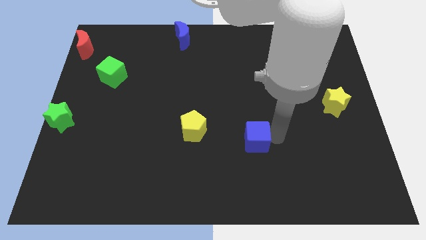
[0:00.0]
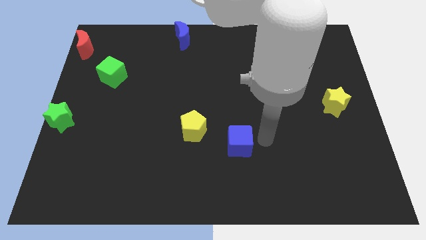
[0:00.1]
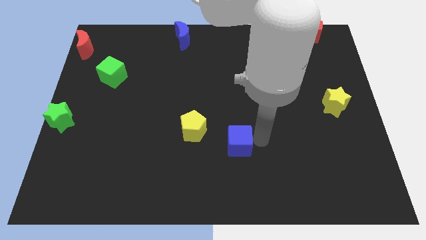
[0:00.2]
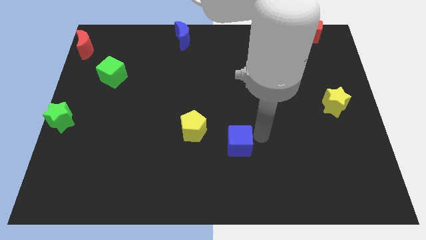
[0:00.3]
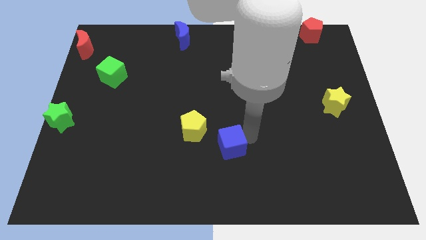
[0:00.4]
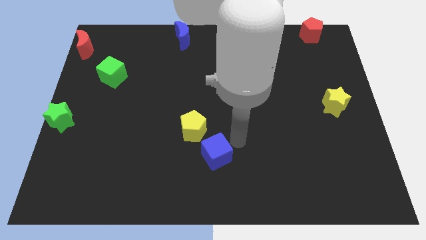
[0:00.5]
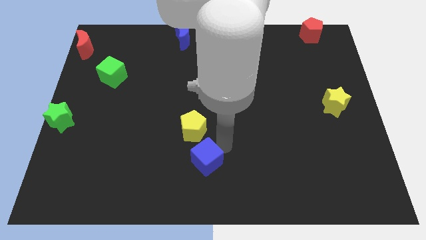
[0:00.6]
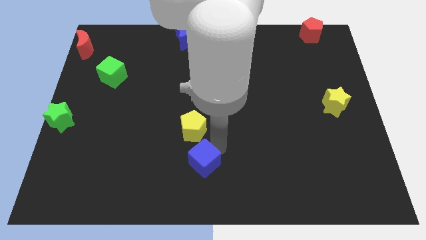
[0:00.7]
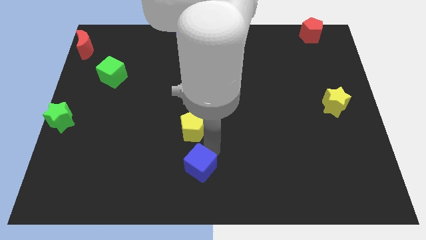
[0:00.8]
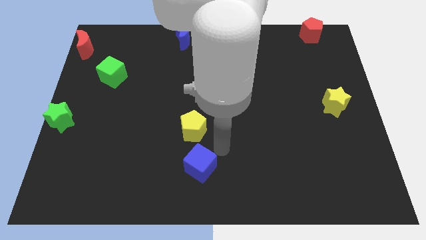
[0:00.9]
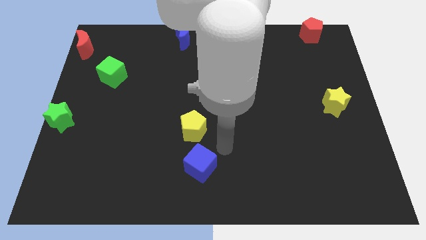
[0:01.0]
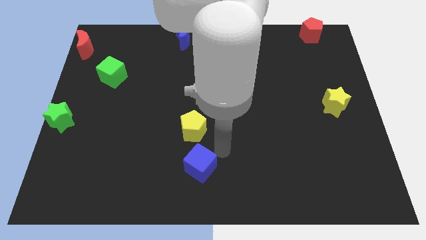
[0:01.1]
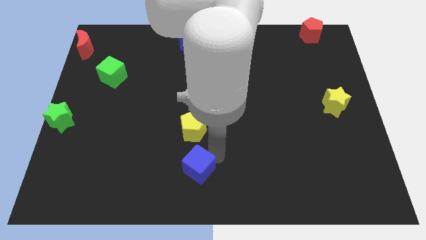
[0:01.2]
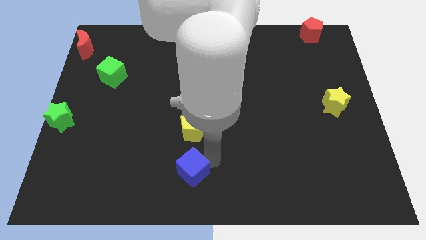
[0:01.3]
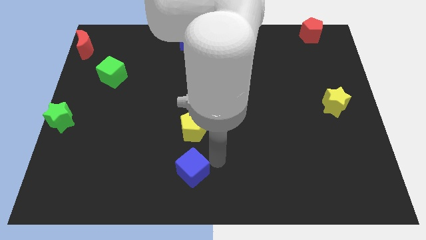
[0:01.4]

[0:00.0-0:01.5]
place the blue cube below the yellow pentagon

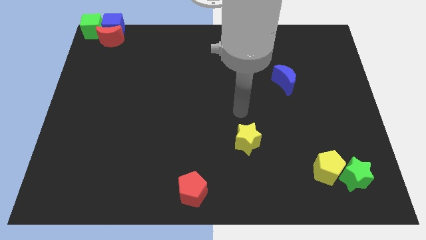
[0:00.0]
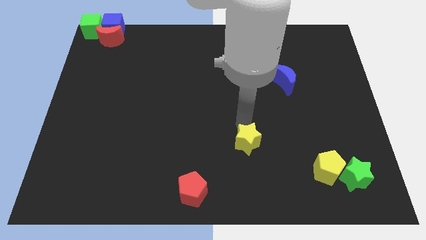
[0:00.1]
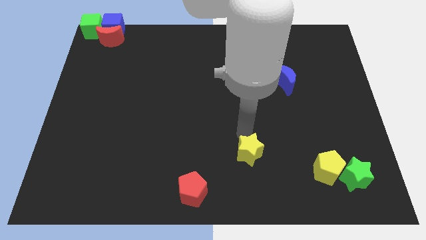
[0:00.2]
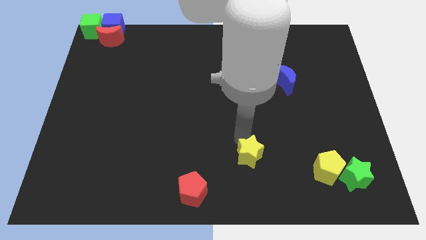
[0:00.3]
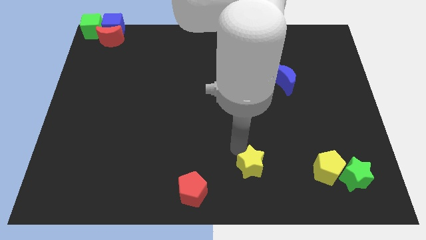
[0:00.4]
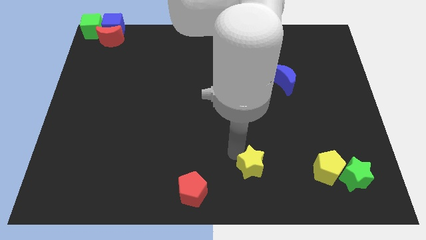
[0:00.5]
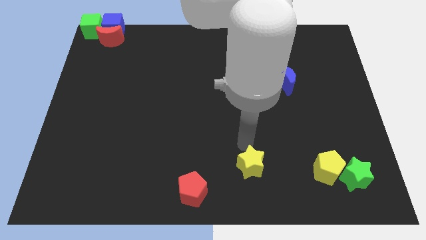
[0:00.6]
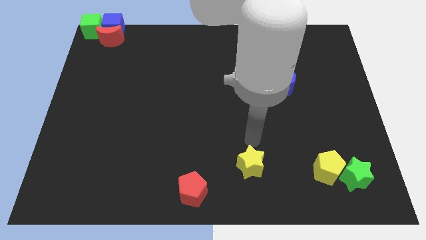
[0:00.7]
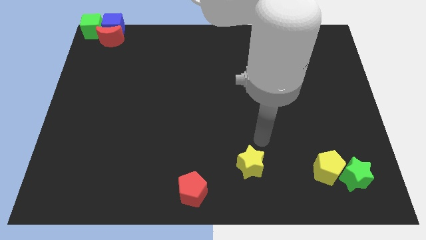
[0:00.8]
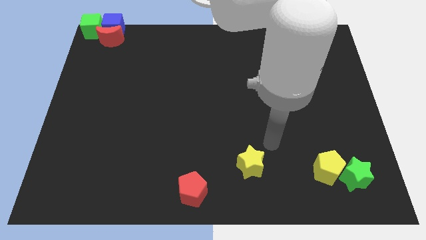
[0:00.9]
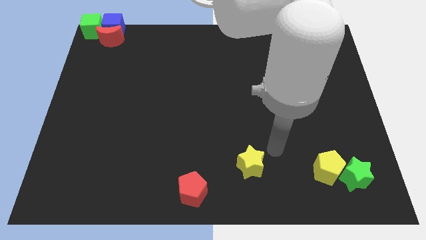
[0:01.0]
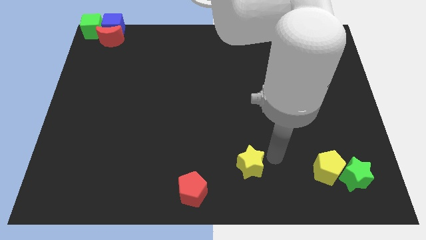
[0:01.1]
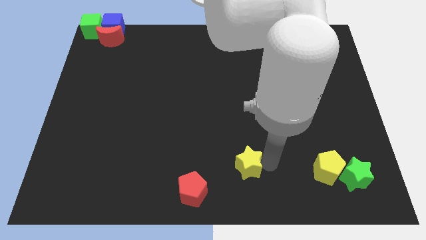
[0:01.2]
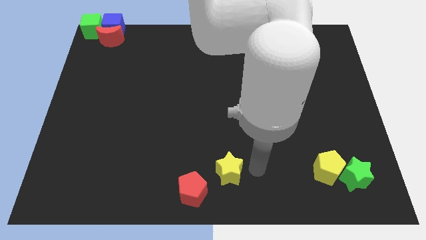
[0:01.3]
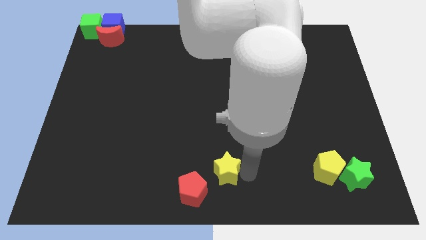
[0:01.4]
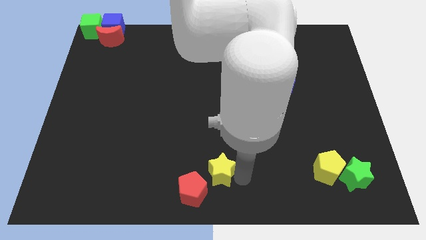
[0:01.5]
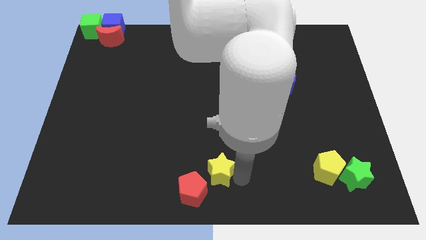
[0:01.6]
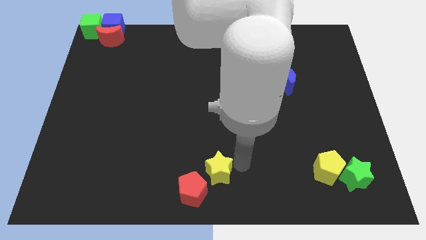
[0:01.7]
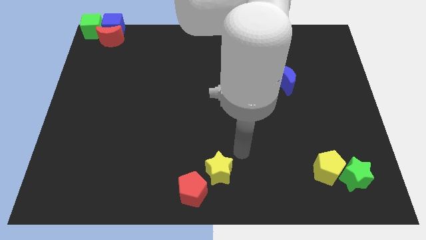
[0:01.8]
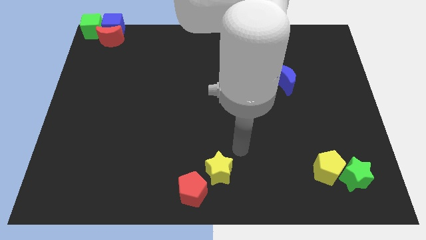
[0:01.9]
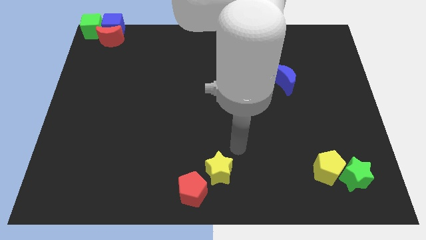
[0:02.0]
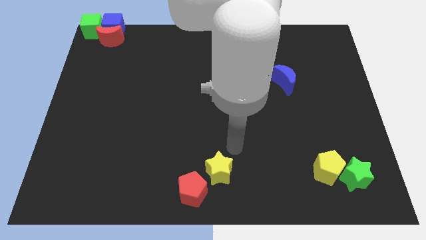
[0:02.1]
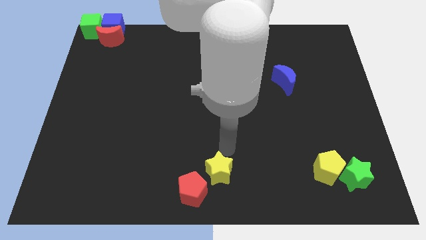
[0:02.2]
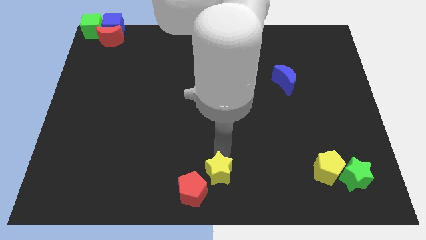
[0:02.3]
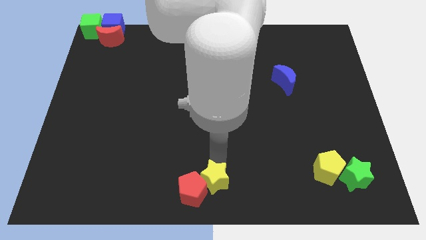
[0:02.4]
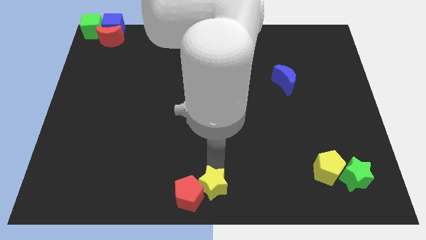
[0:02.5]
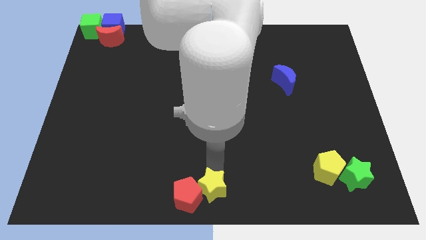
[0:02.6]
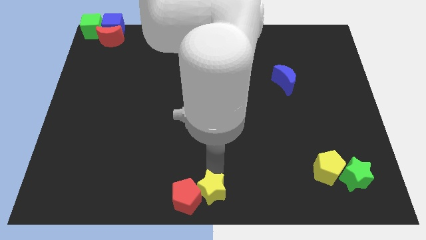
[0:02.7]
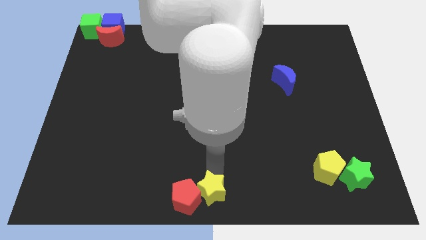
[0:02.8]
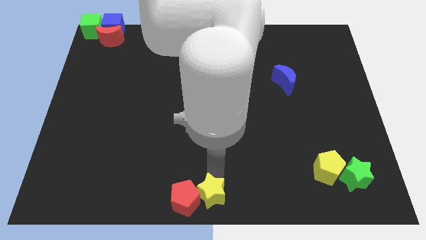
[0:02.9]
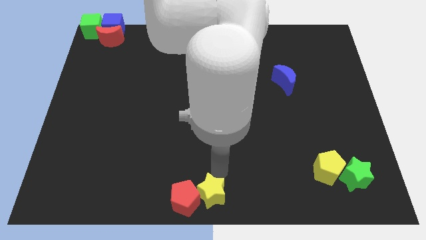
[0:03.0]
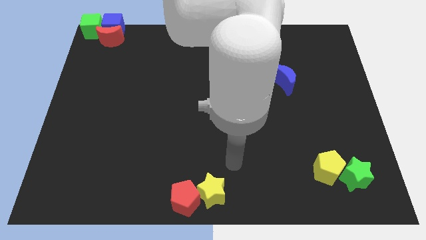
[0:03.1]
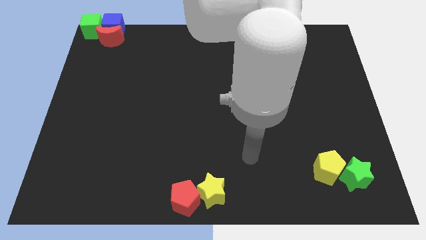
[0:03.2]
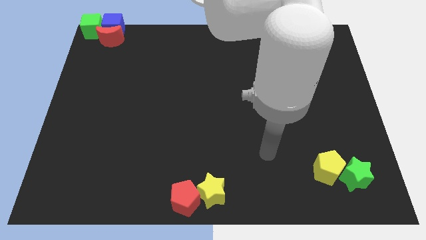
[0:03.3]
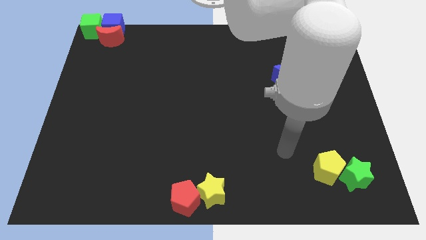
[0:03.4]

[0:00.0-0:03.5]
move the yellow star into the red pentagon

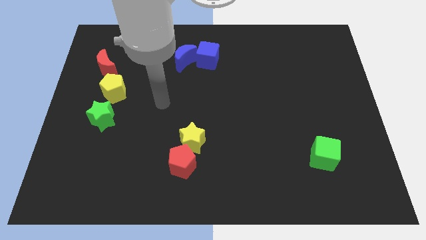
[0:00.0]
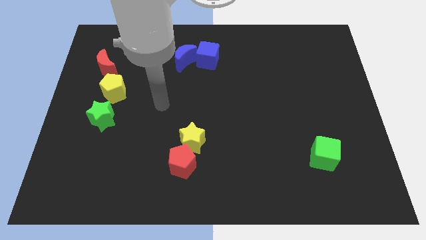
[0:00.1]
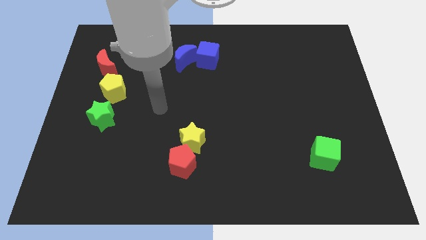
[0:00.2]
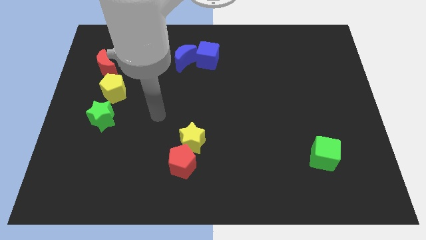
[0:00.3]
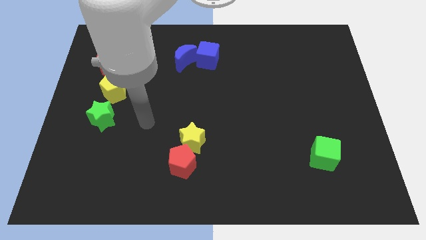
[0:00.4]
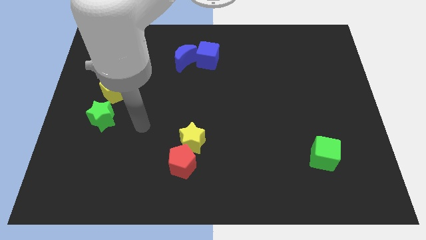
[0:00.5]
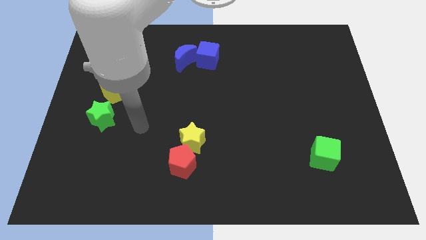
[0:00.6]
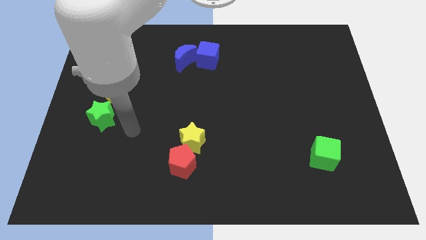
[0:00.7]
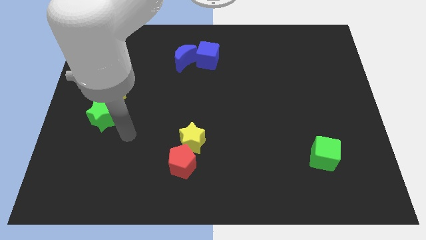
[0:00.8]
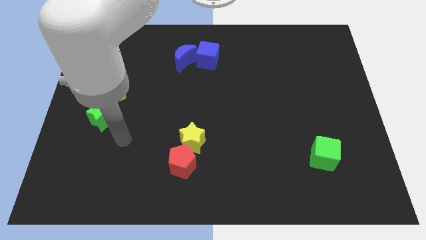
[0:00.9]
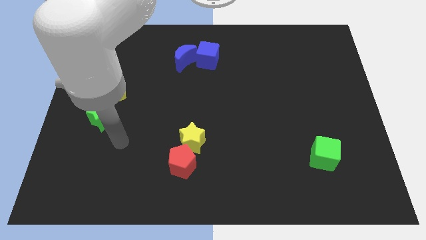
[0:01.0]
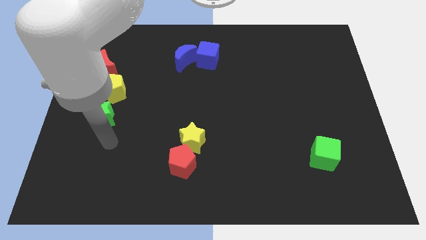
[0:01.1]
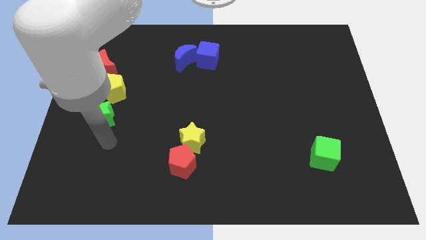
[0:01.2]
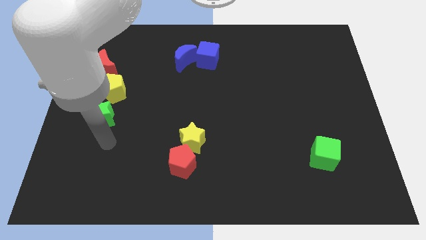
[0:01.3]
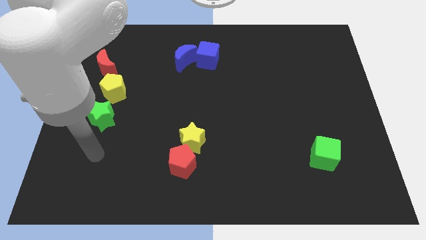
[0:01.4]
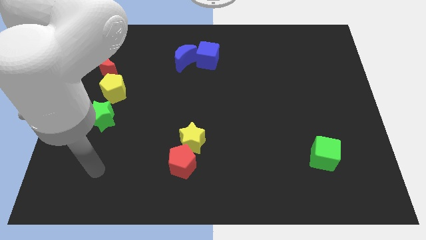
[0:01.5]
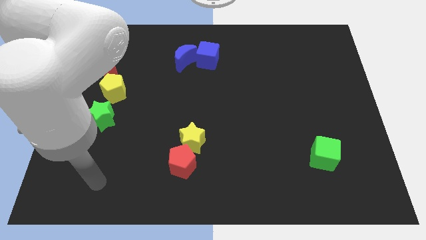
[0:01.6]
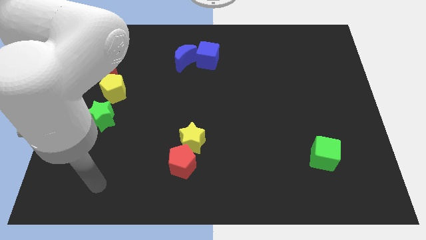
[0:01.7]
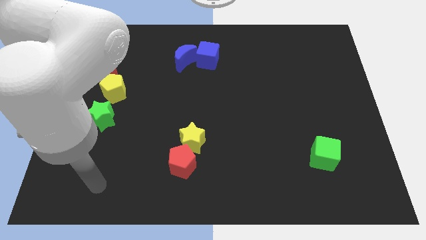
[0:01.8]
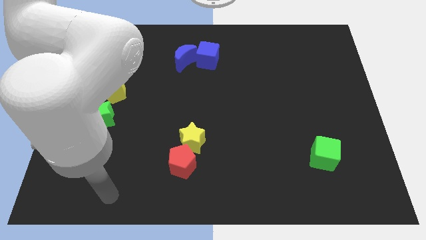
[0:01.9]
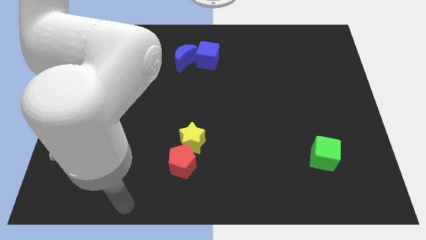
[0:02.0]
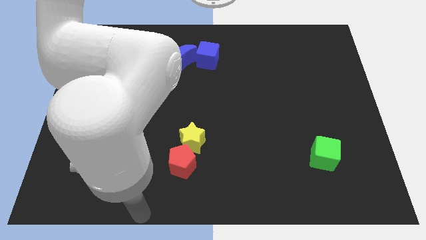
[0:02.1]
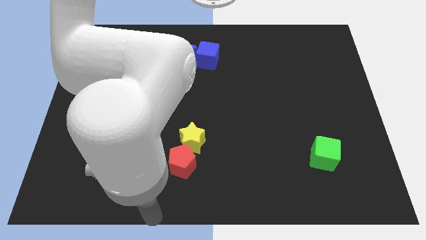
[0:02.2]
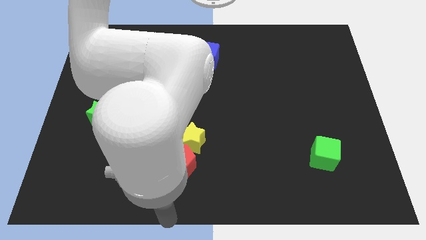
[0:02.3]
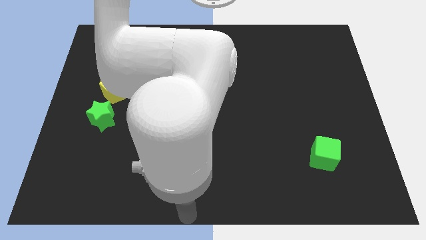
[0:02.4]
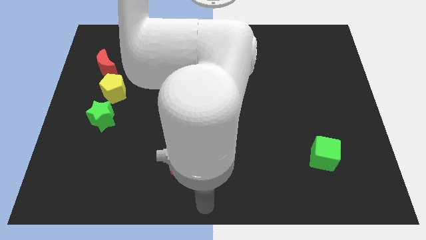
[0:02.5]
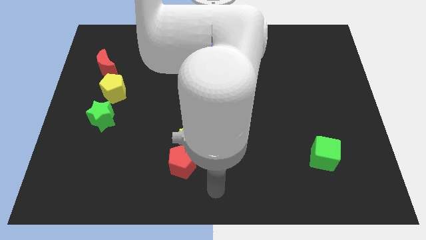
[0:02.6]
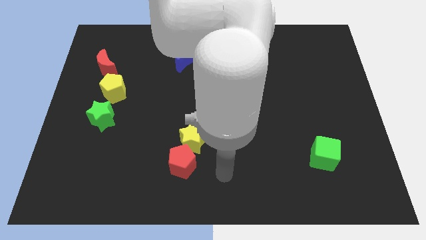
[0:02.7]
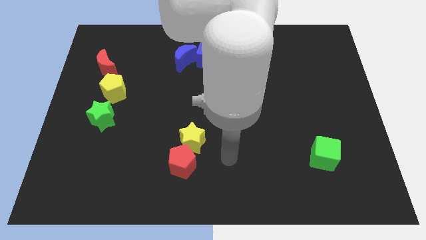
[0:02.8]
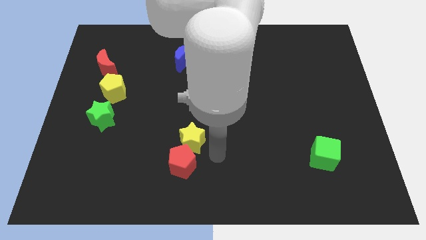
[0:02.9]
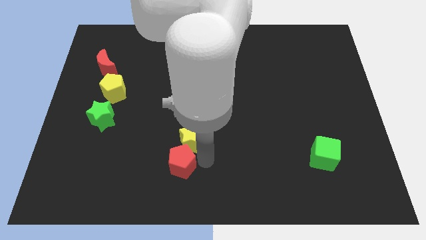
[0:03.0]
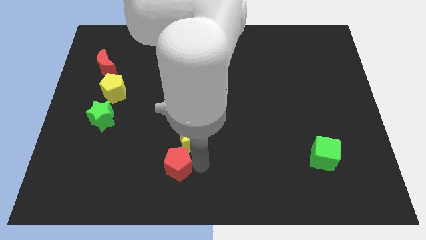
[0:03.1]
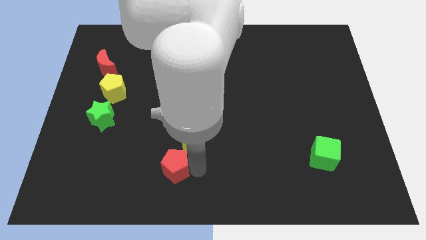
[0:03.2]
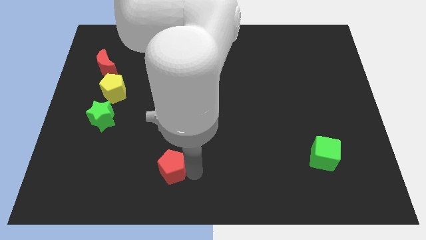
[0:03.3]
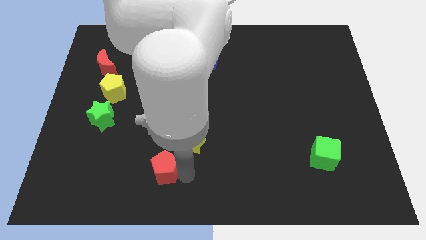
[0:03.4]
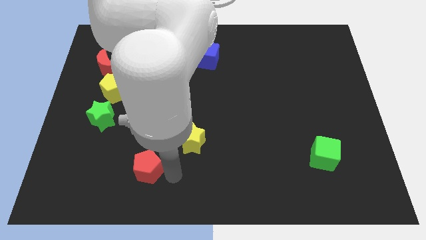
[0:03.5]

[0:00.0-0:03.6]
push the red pentagon to the bottom left of the yellow star

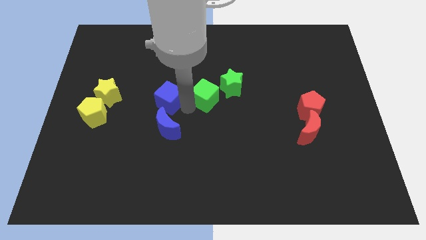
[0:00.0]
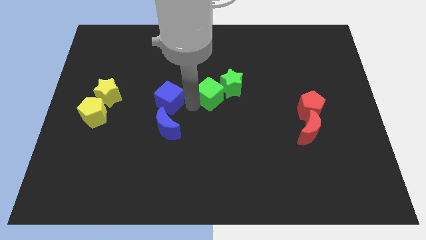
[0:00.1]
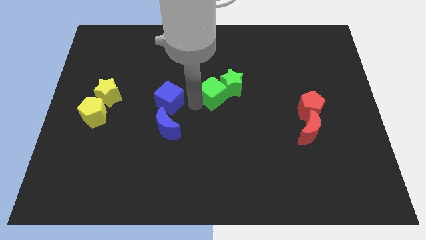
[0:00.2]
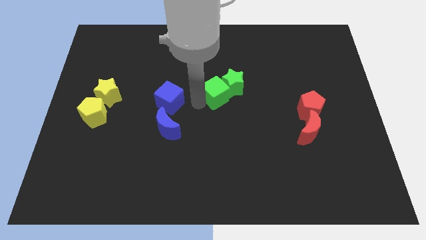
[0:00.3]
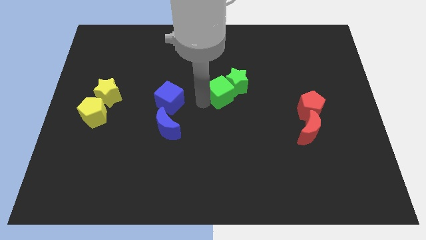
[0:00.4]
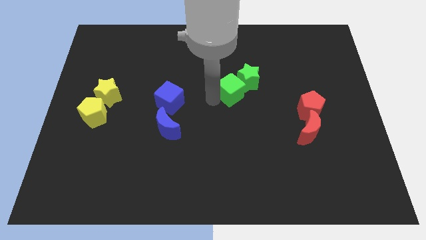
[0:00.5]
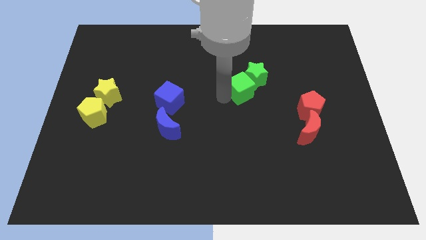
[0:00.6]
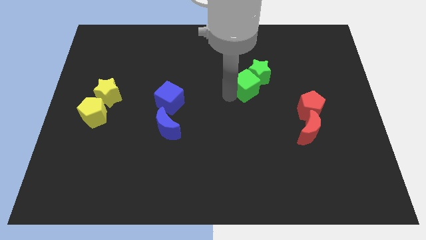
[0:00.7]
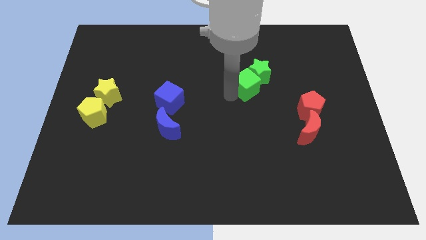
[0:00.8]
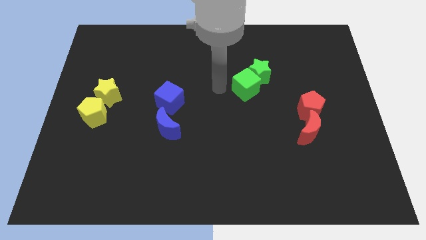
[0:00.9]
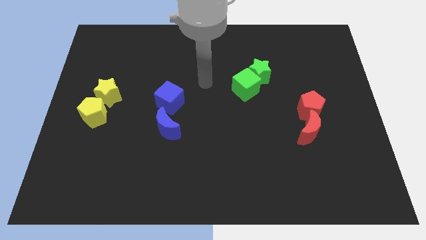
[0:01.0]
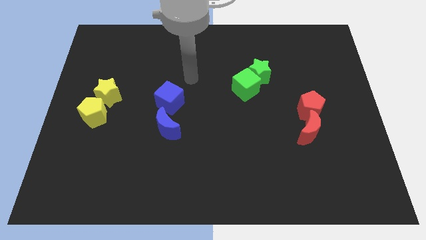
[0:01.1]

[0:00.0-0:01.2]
push the green cube into the green star
